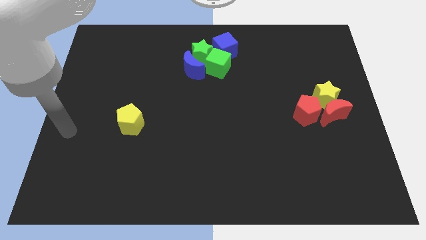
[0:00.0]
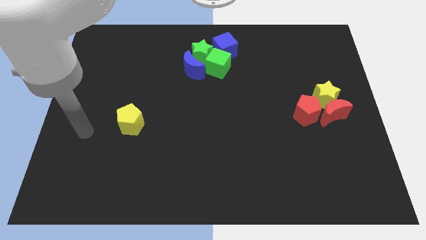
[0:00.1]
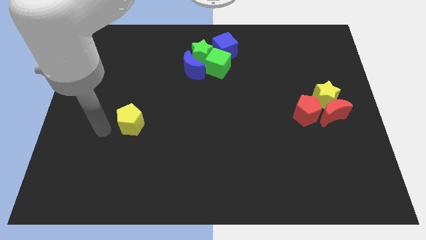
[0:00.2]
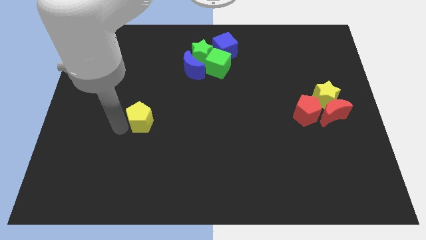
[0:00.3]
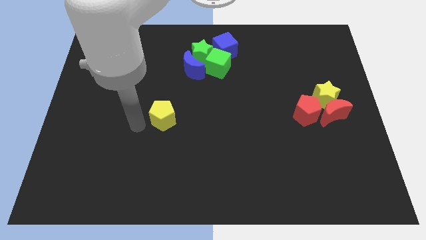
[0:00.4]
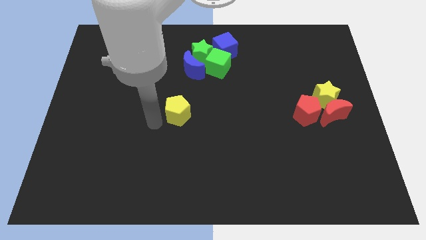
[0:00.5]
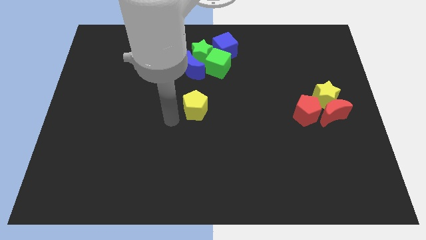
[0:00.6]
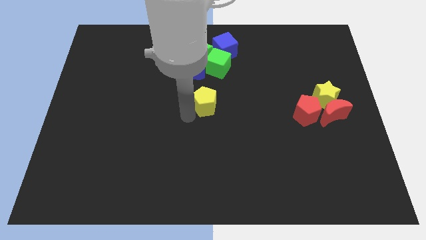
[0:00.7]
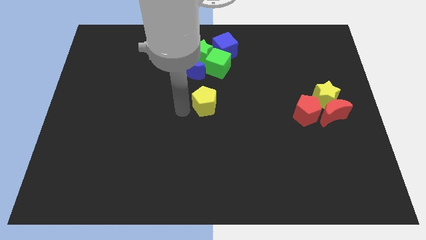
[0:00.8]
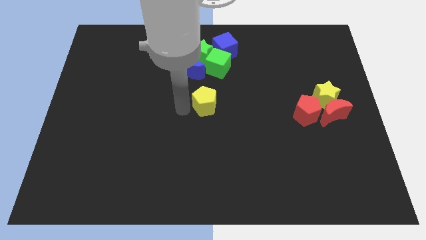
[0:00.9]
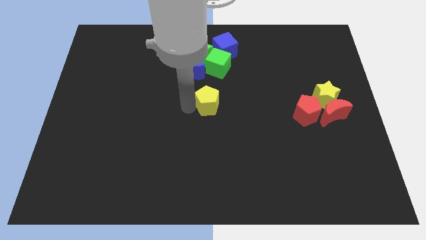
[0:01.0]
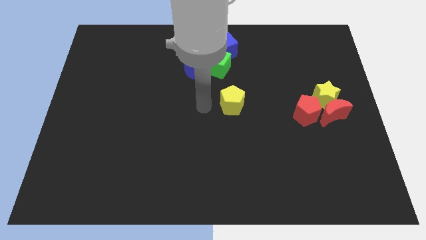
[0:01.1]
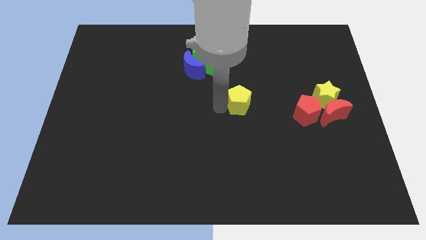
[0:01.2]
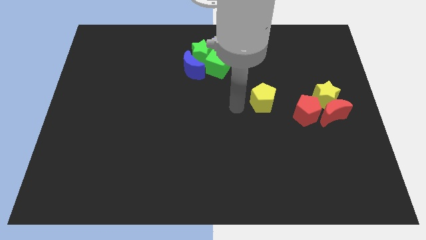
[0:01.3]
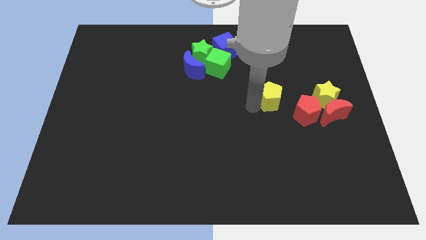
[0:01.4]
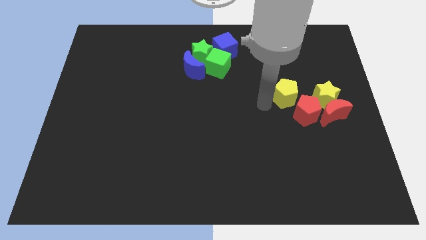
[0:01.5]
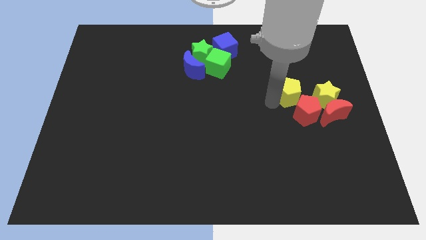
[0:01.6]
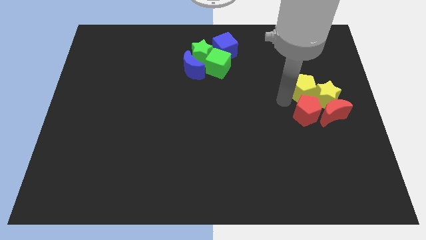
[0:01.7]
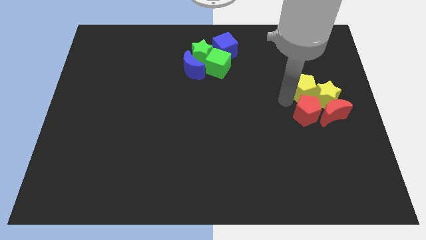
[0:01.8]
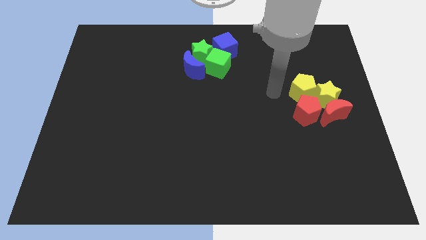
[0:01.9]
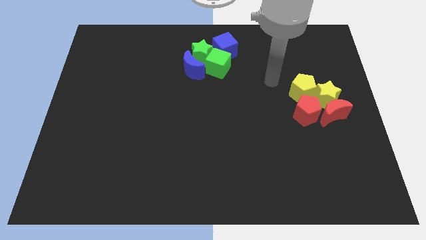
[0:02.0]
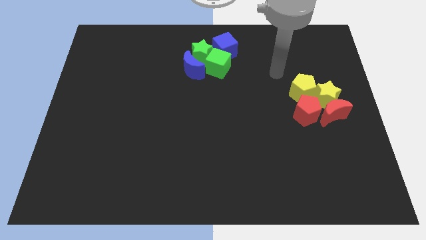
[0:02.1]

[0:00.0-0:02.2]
place yellow pentagon on top of red pentagon

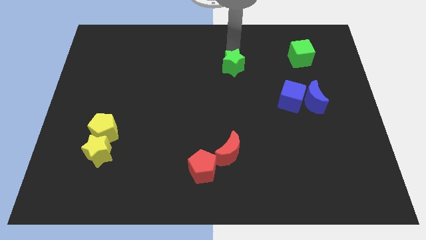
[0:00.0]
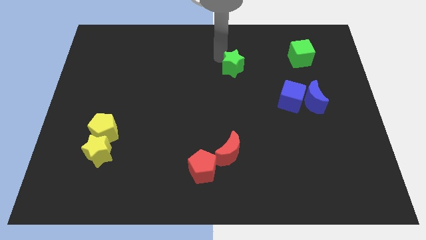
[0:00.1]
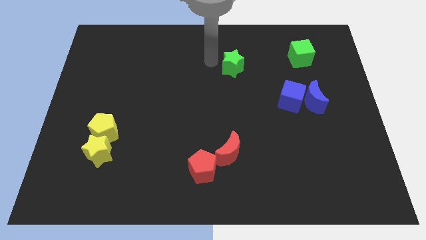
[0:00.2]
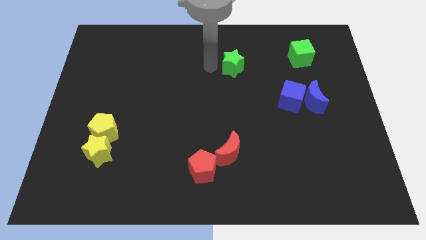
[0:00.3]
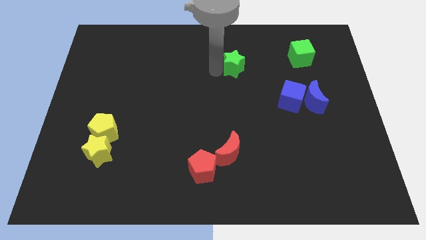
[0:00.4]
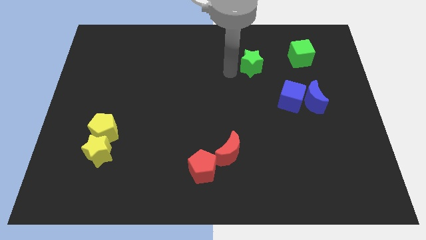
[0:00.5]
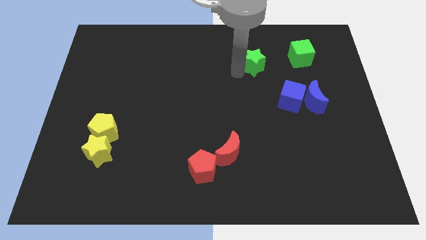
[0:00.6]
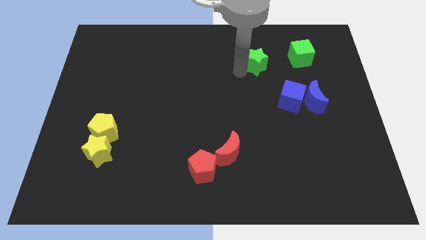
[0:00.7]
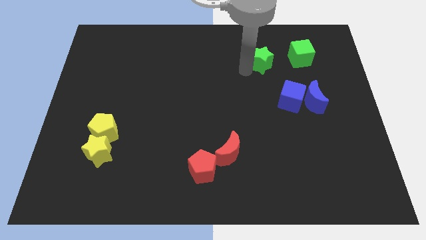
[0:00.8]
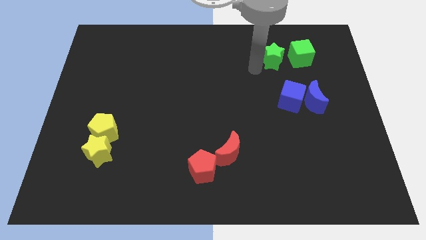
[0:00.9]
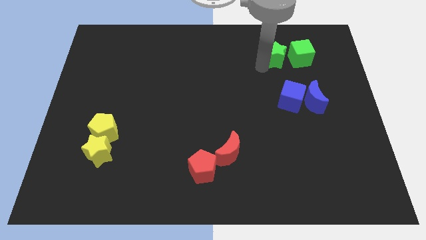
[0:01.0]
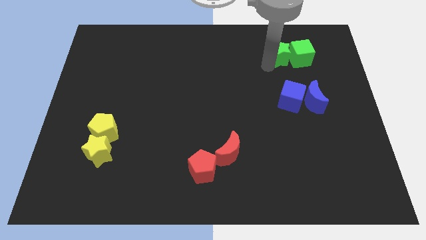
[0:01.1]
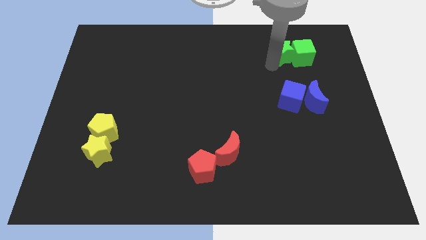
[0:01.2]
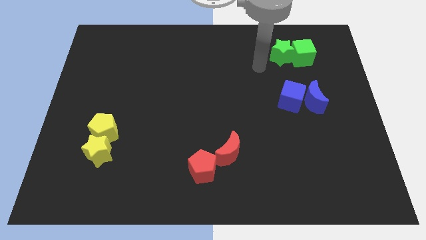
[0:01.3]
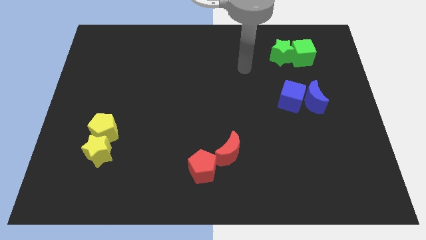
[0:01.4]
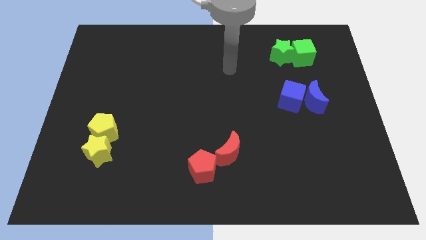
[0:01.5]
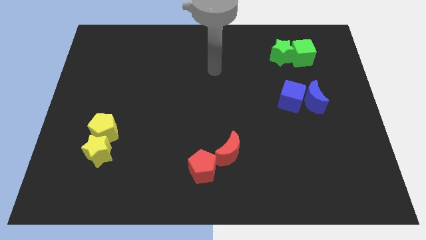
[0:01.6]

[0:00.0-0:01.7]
move the green star into the green cube

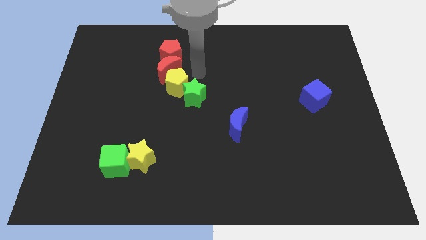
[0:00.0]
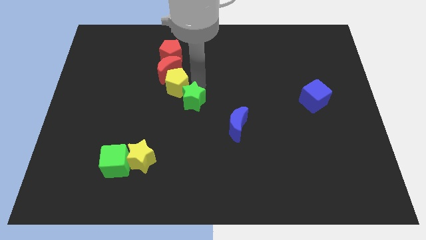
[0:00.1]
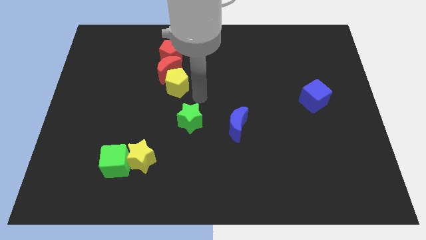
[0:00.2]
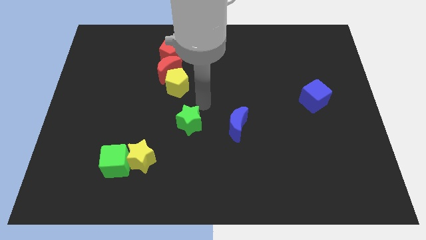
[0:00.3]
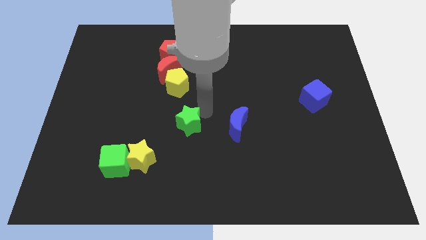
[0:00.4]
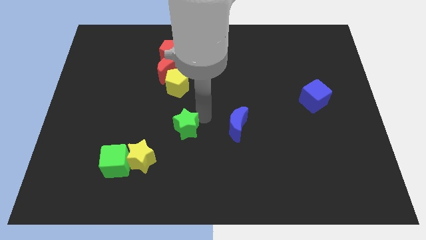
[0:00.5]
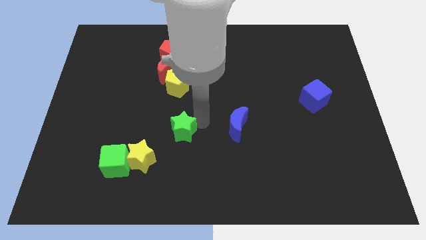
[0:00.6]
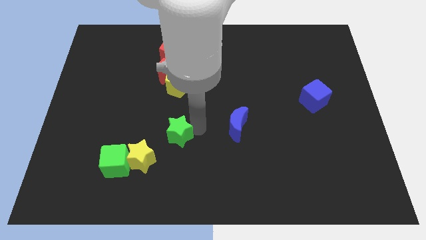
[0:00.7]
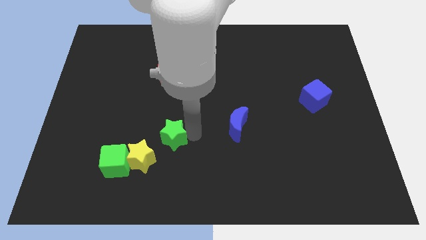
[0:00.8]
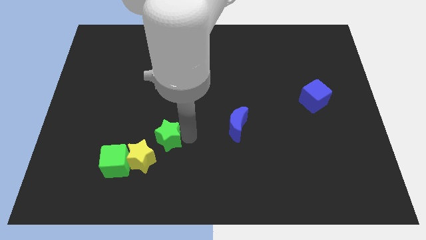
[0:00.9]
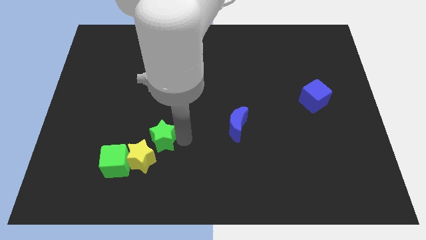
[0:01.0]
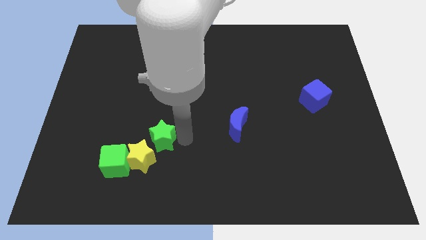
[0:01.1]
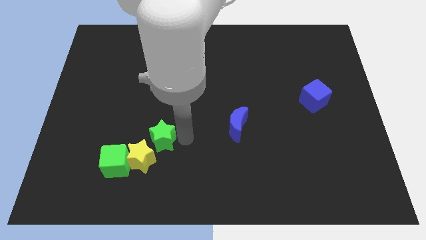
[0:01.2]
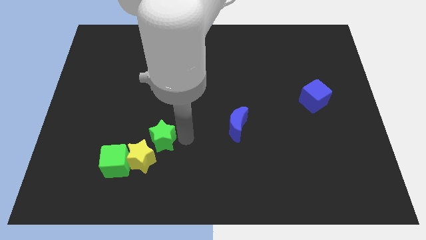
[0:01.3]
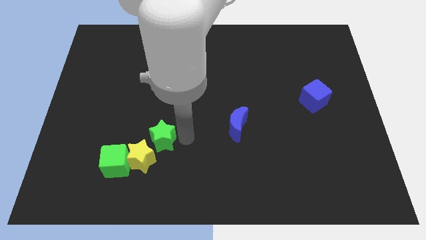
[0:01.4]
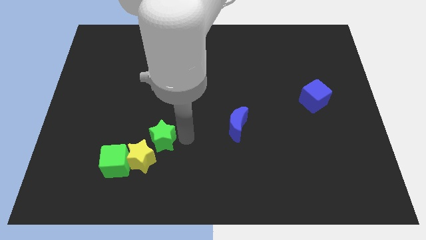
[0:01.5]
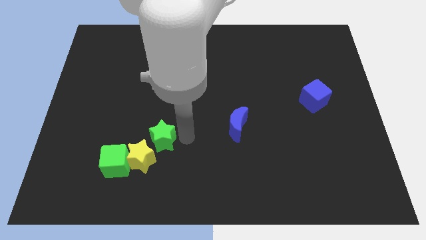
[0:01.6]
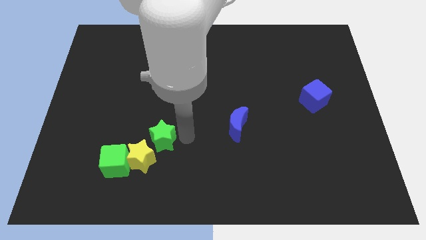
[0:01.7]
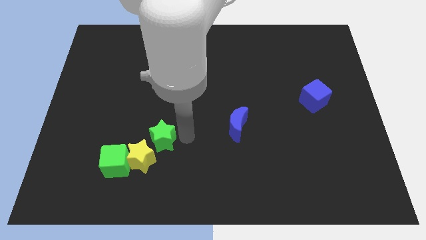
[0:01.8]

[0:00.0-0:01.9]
place green star above the yellow star

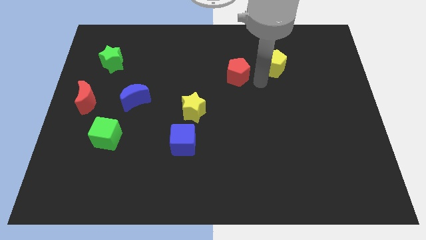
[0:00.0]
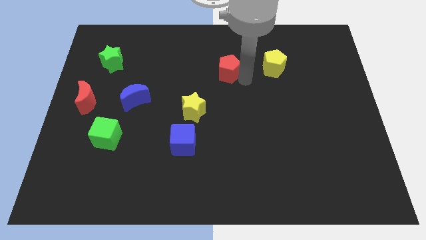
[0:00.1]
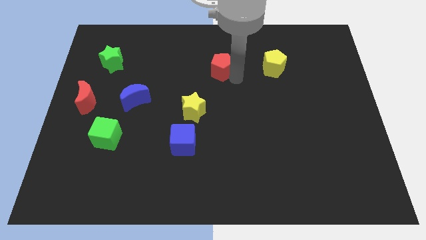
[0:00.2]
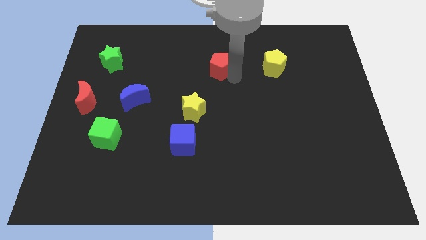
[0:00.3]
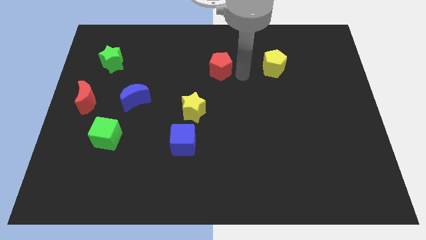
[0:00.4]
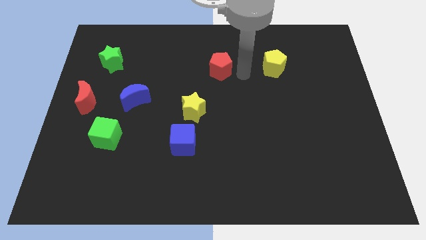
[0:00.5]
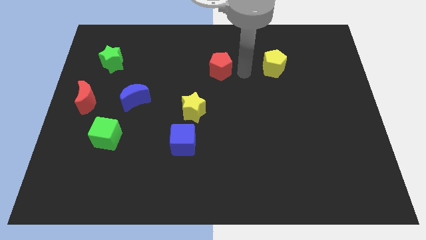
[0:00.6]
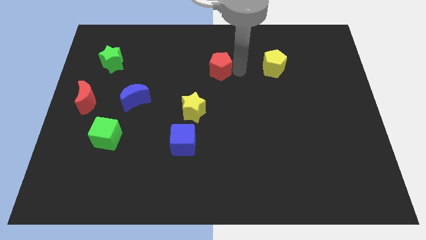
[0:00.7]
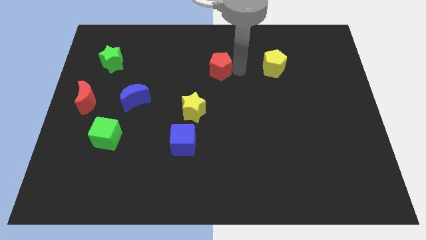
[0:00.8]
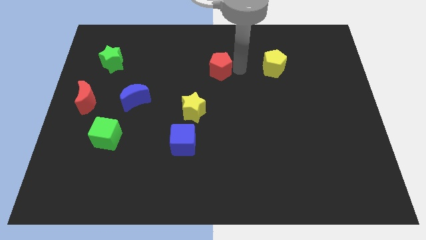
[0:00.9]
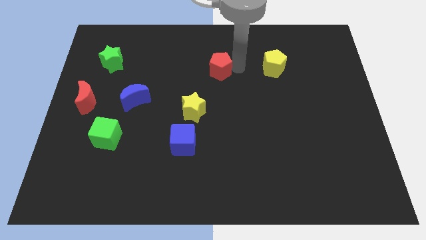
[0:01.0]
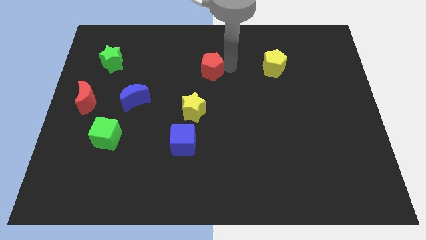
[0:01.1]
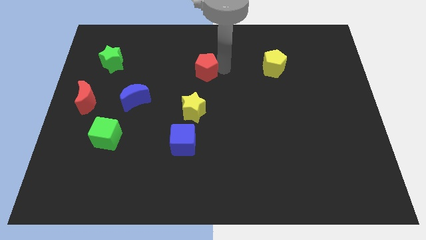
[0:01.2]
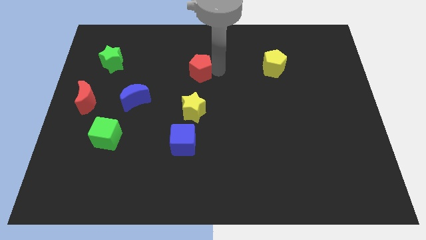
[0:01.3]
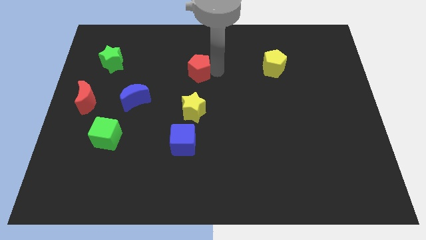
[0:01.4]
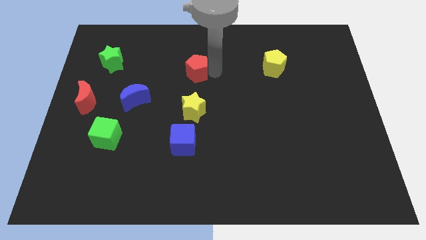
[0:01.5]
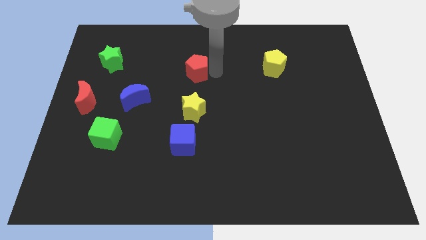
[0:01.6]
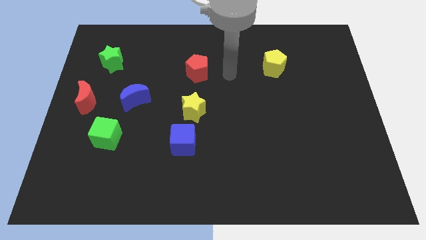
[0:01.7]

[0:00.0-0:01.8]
move the red pentagon to the top side of the yellow star

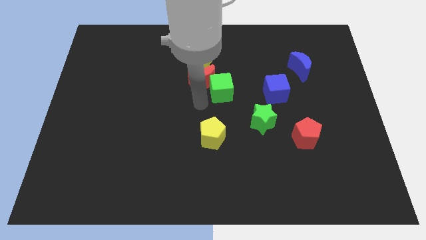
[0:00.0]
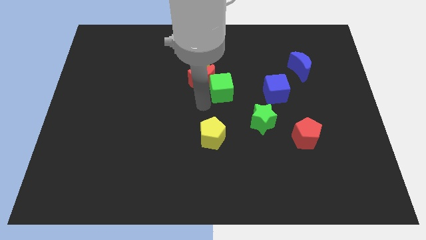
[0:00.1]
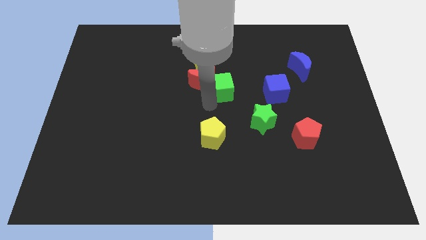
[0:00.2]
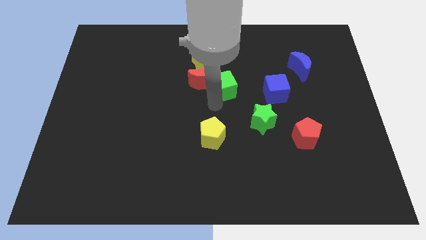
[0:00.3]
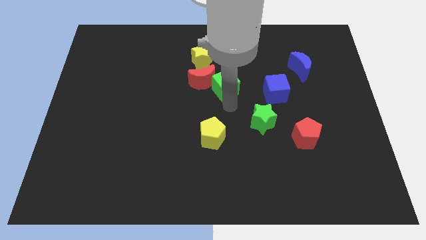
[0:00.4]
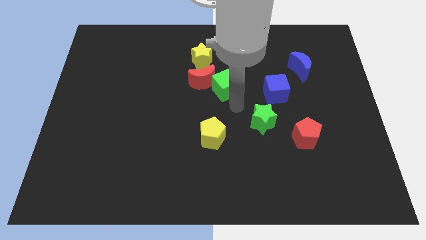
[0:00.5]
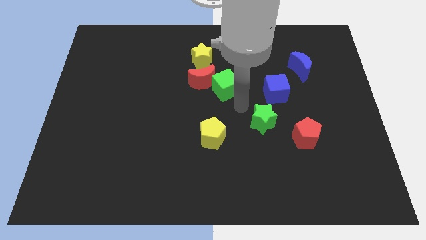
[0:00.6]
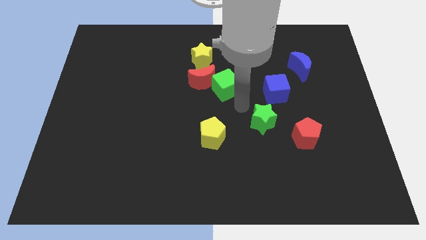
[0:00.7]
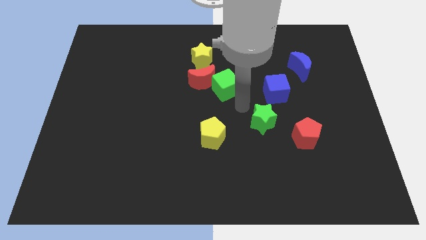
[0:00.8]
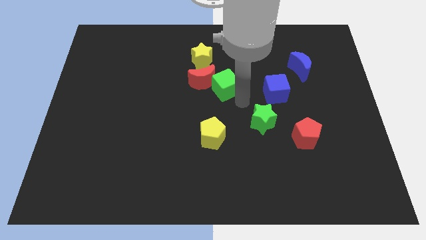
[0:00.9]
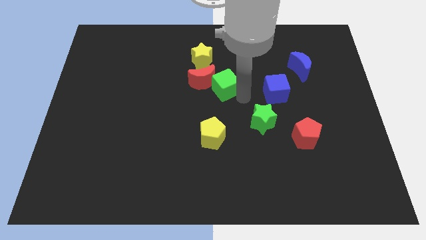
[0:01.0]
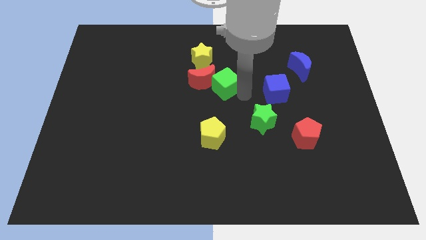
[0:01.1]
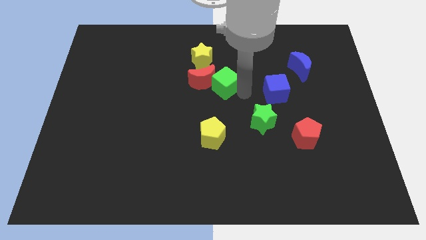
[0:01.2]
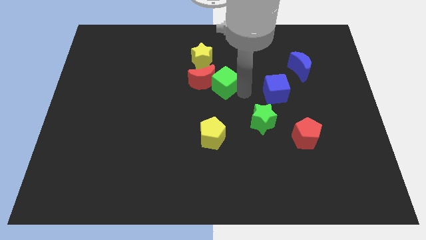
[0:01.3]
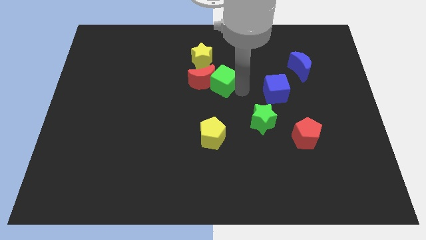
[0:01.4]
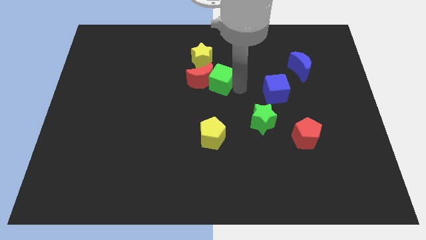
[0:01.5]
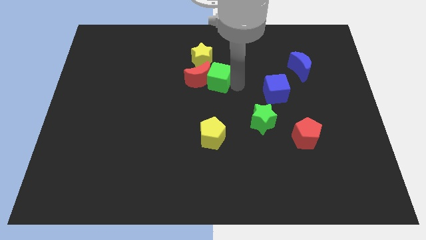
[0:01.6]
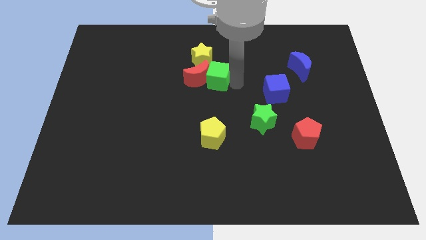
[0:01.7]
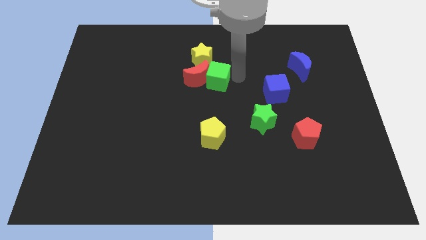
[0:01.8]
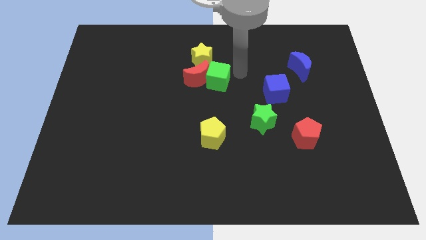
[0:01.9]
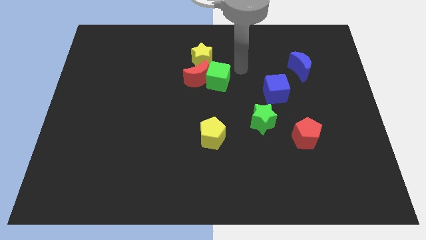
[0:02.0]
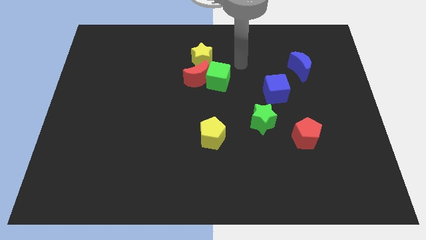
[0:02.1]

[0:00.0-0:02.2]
push the green cube to the right side of the red moon
